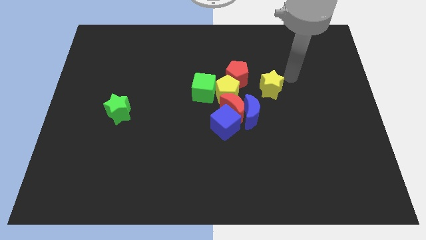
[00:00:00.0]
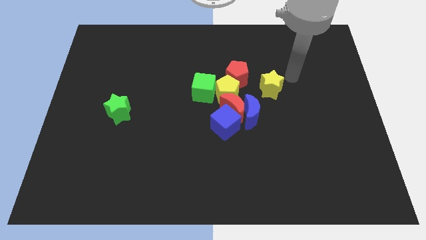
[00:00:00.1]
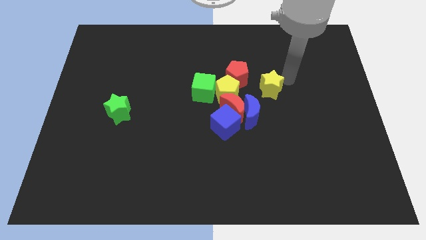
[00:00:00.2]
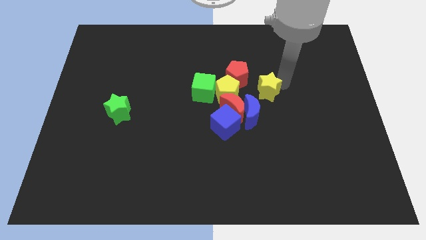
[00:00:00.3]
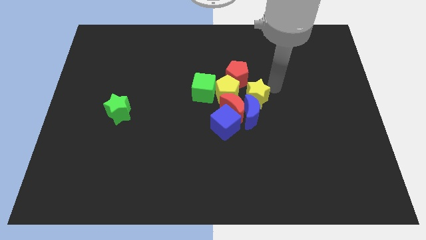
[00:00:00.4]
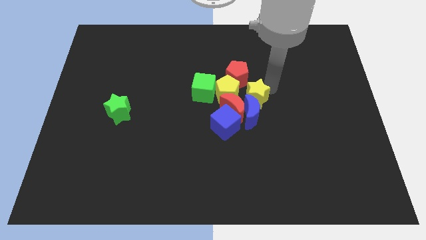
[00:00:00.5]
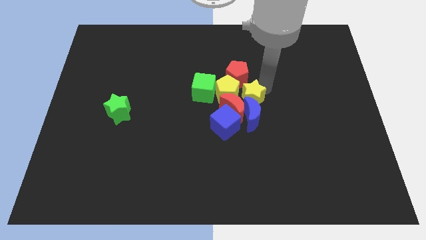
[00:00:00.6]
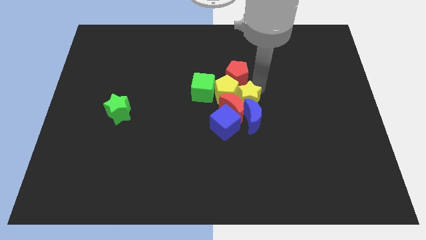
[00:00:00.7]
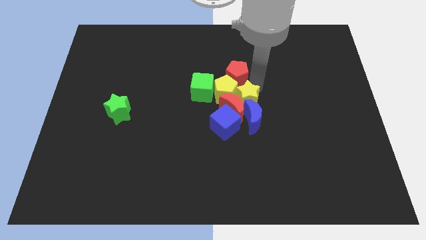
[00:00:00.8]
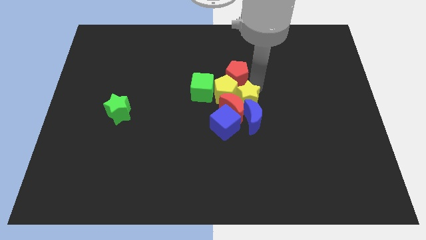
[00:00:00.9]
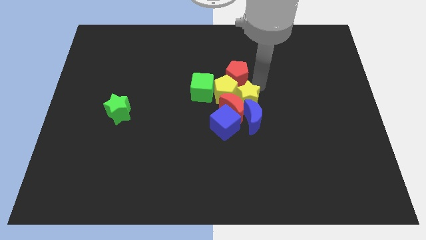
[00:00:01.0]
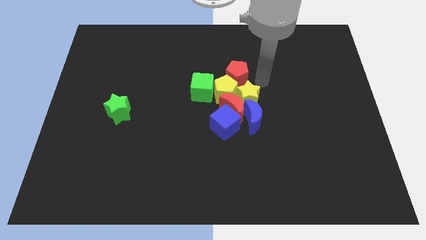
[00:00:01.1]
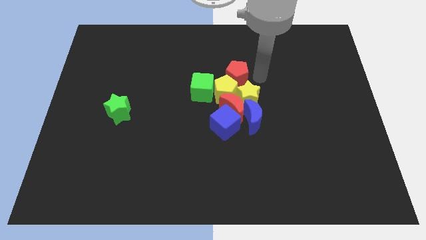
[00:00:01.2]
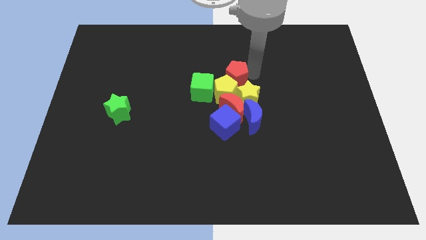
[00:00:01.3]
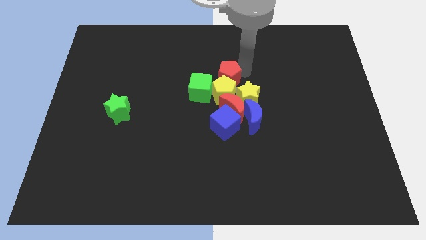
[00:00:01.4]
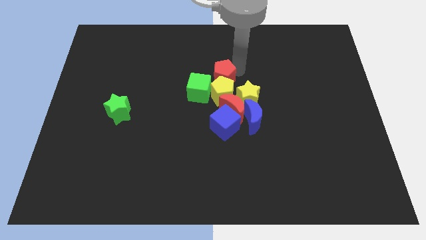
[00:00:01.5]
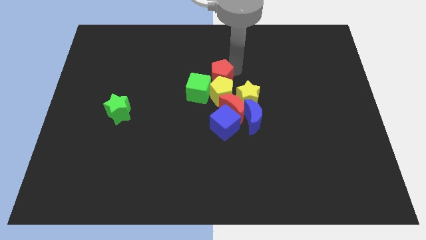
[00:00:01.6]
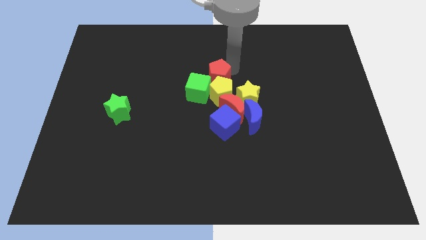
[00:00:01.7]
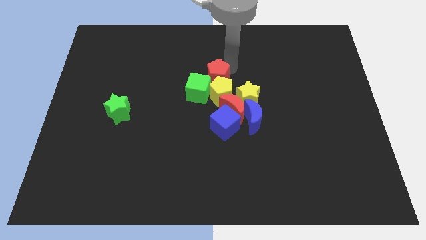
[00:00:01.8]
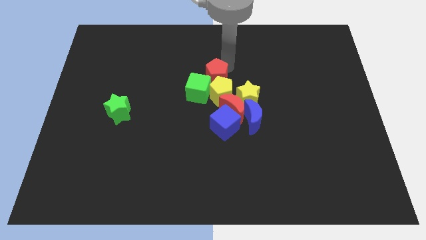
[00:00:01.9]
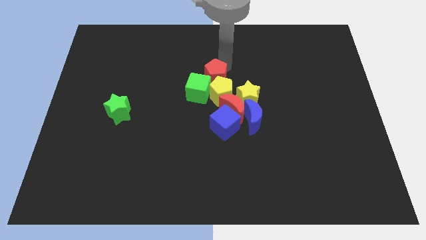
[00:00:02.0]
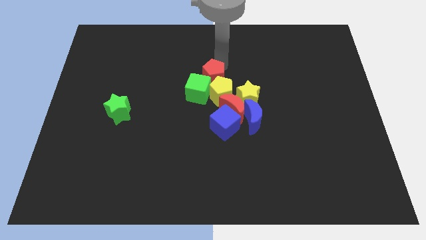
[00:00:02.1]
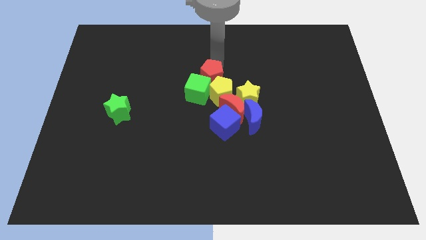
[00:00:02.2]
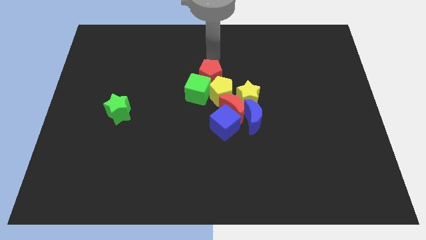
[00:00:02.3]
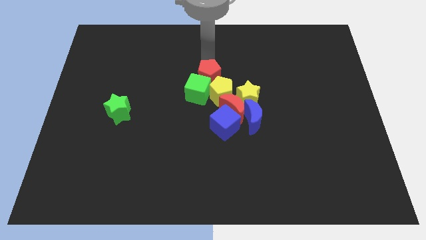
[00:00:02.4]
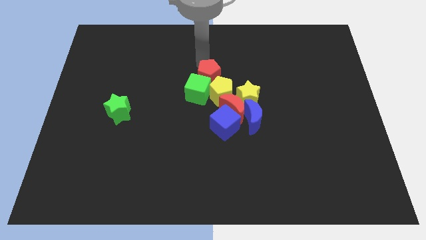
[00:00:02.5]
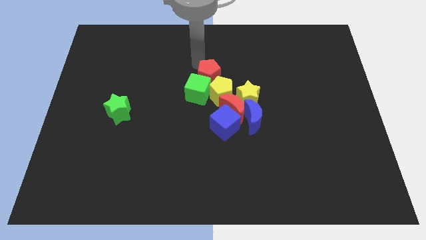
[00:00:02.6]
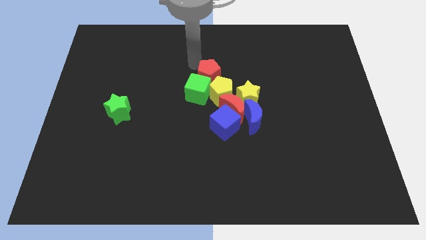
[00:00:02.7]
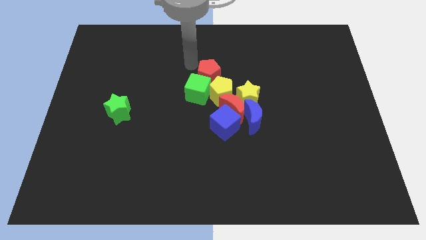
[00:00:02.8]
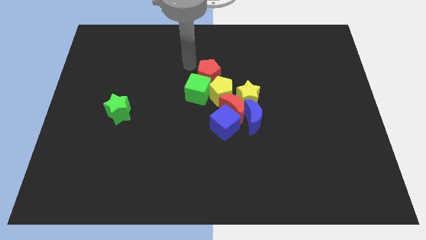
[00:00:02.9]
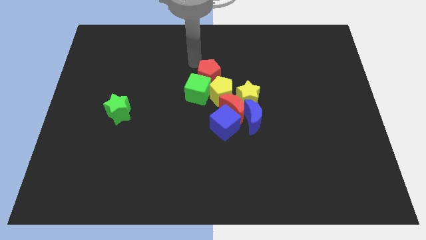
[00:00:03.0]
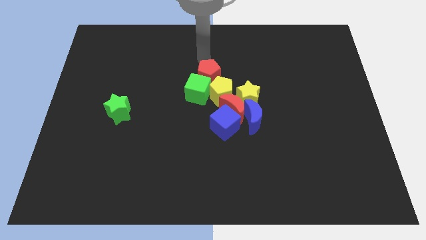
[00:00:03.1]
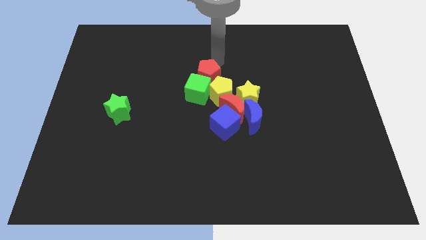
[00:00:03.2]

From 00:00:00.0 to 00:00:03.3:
move the red pentagon above the green cube

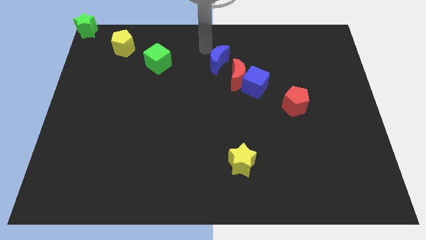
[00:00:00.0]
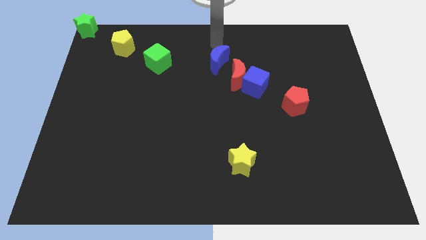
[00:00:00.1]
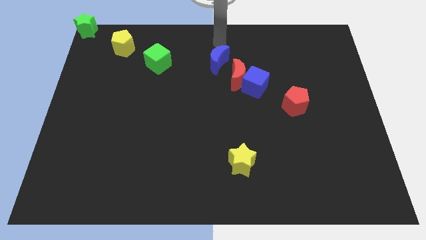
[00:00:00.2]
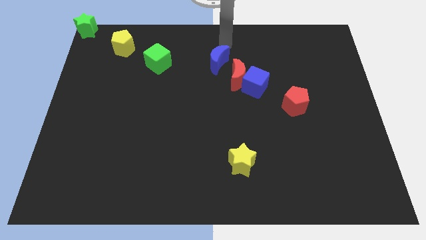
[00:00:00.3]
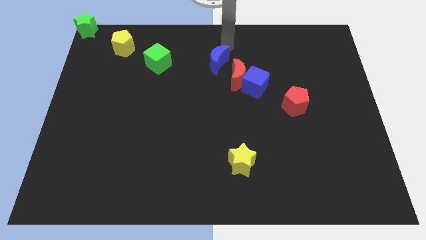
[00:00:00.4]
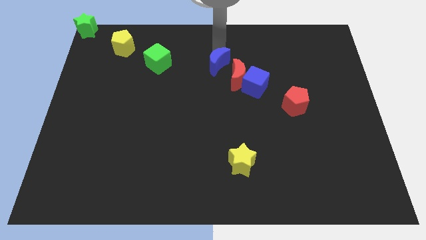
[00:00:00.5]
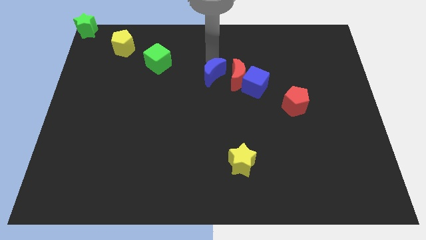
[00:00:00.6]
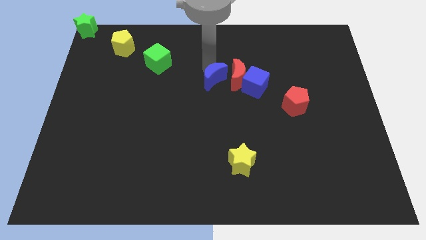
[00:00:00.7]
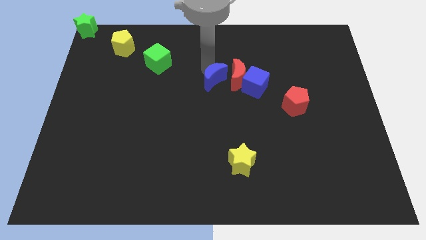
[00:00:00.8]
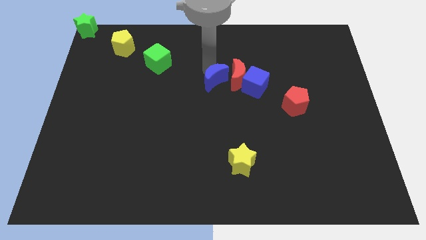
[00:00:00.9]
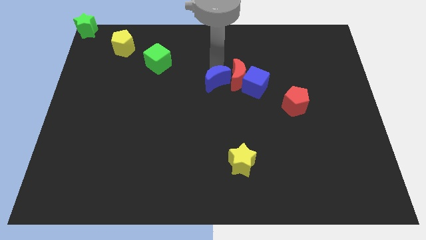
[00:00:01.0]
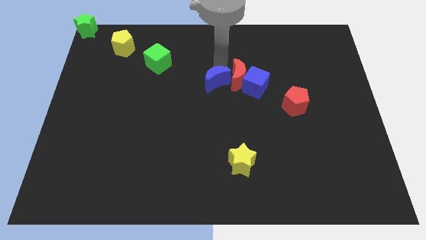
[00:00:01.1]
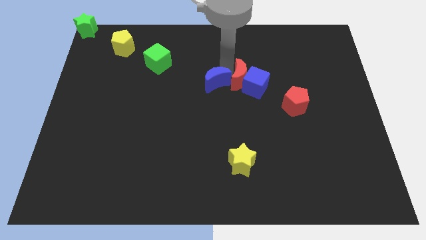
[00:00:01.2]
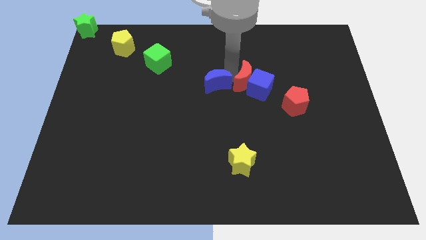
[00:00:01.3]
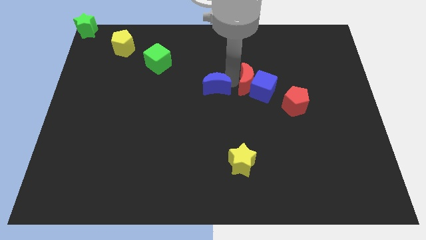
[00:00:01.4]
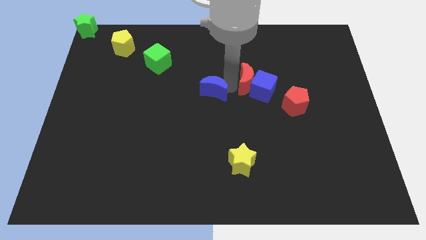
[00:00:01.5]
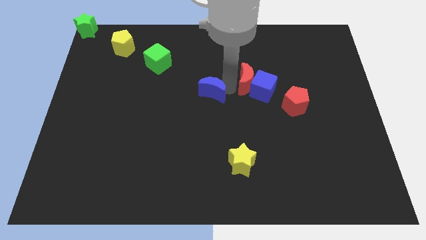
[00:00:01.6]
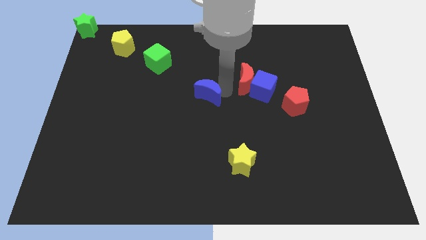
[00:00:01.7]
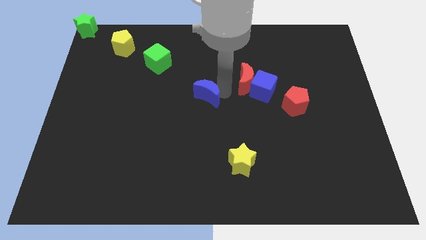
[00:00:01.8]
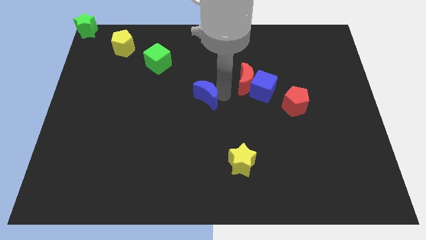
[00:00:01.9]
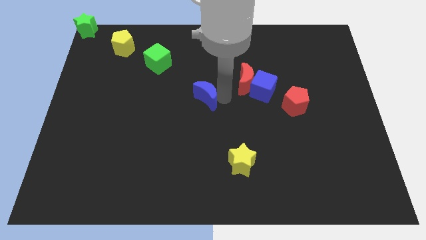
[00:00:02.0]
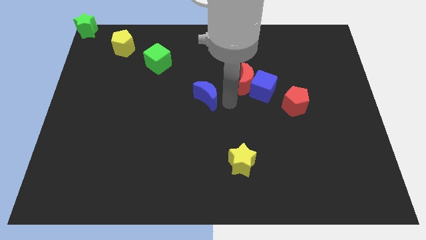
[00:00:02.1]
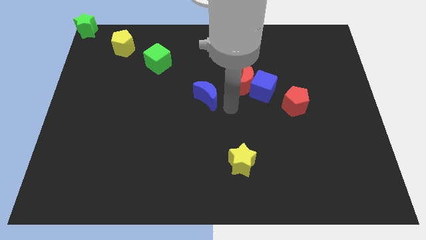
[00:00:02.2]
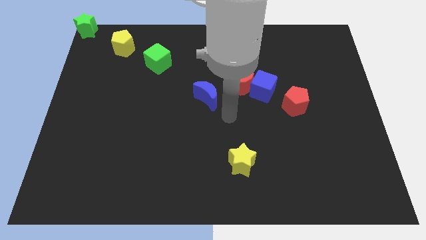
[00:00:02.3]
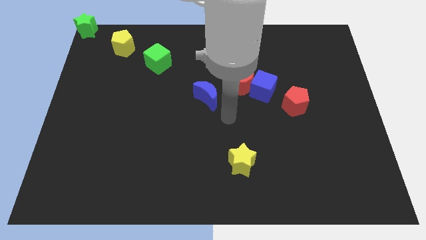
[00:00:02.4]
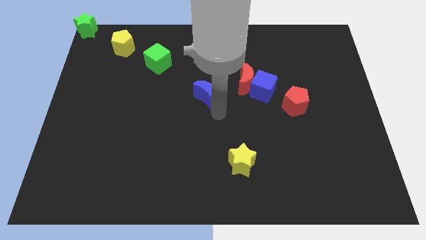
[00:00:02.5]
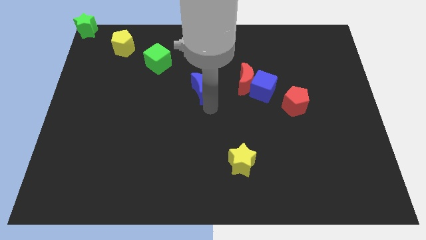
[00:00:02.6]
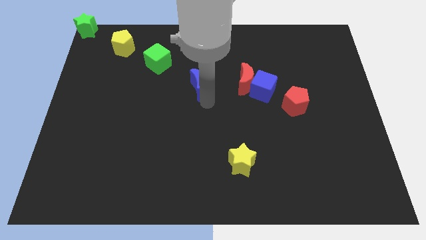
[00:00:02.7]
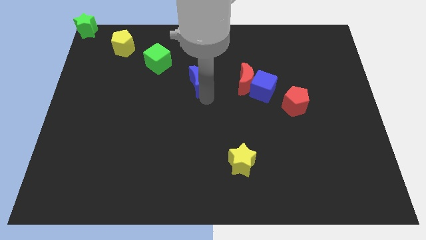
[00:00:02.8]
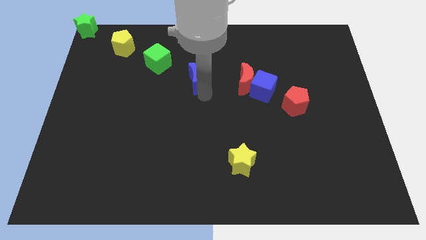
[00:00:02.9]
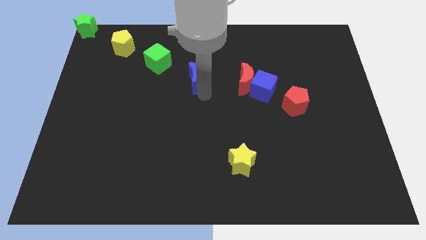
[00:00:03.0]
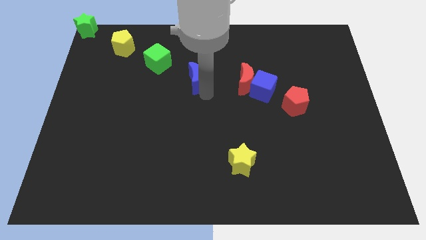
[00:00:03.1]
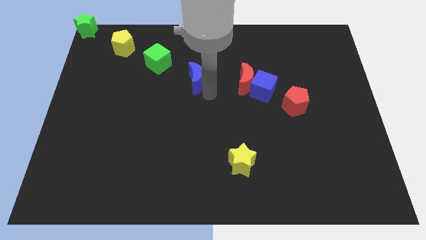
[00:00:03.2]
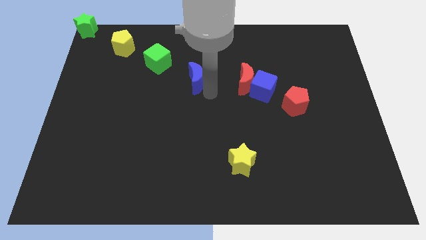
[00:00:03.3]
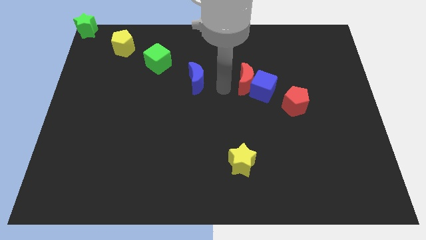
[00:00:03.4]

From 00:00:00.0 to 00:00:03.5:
place the blue moon towards the green cube

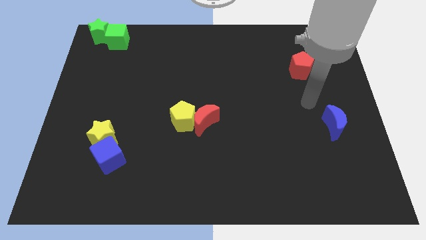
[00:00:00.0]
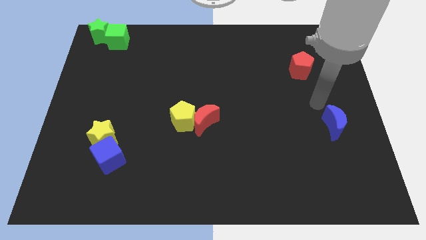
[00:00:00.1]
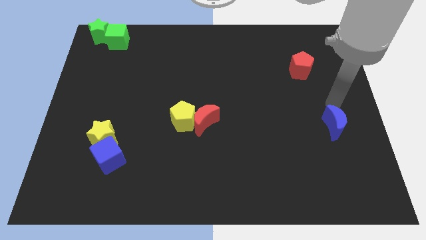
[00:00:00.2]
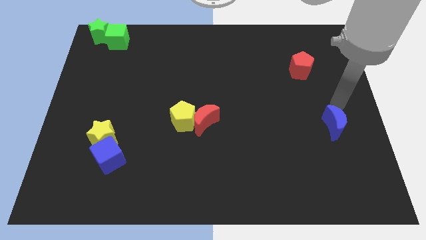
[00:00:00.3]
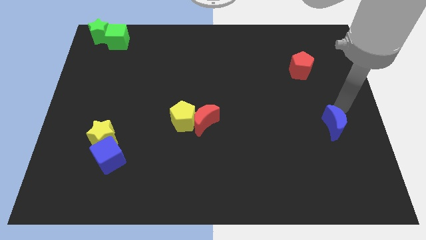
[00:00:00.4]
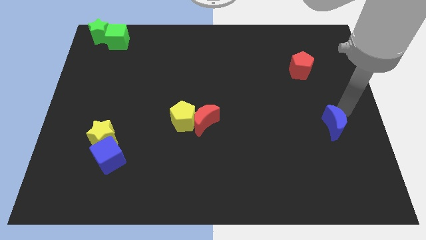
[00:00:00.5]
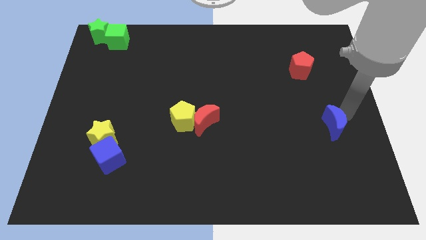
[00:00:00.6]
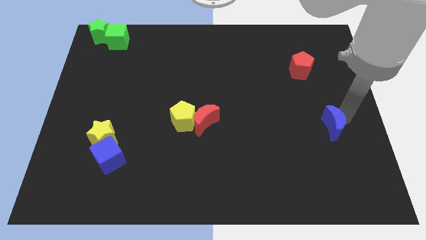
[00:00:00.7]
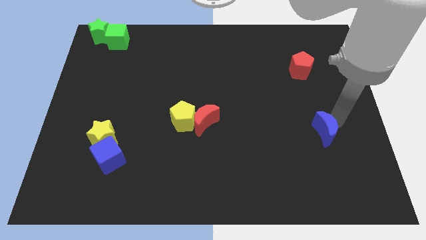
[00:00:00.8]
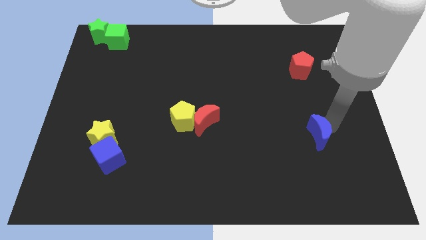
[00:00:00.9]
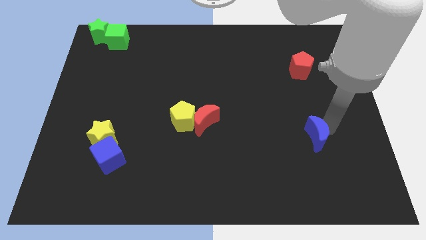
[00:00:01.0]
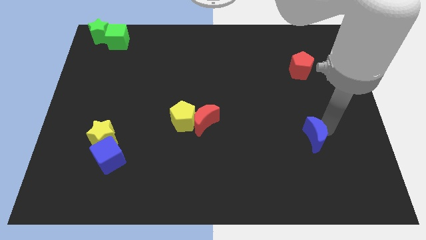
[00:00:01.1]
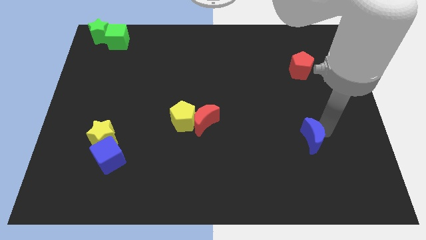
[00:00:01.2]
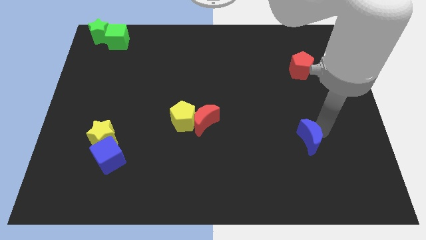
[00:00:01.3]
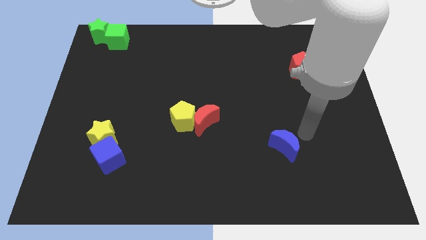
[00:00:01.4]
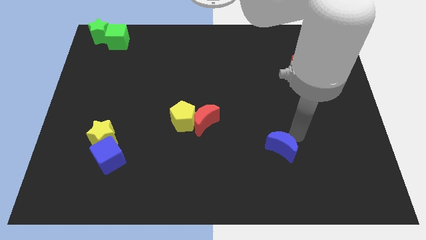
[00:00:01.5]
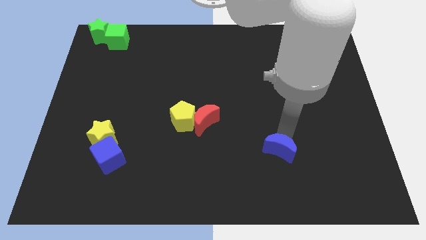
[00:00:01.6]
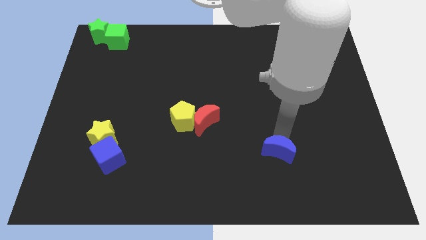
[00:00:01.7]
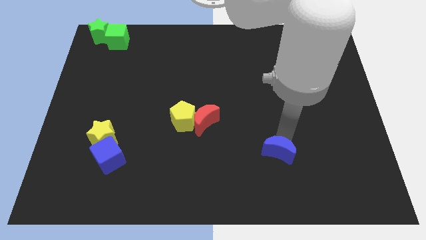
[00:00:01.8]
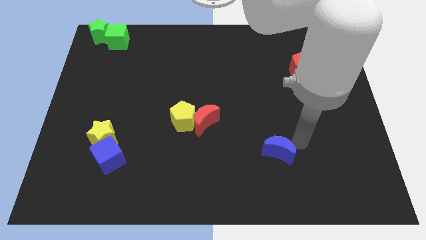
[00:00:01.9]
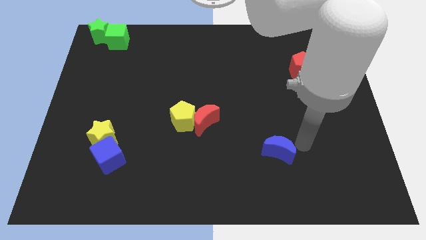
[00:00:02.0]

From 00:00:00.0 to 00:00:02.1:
move the blue moon diagonally to the red crescent
